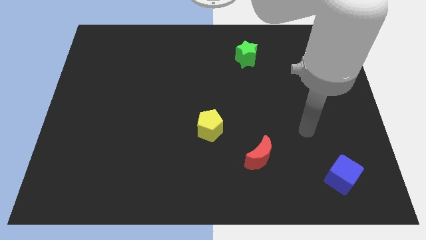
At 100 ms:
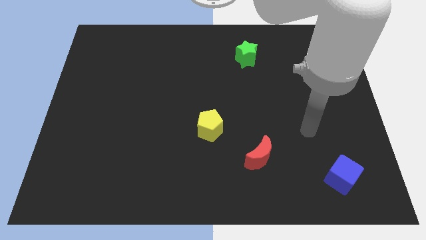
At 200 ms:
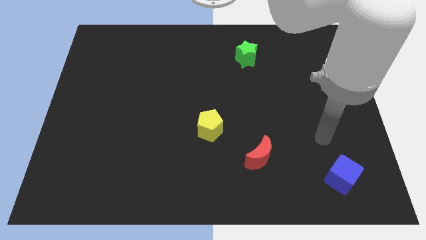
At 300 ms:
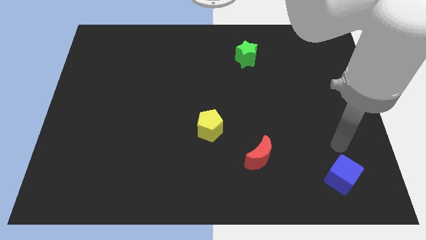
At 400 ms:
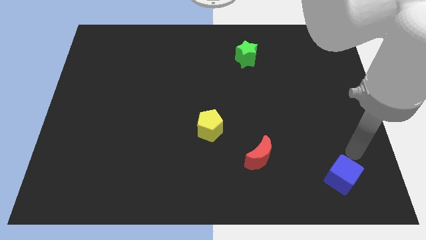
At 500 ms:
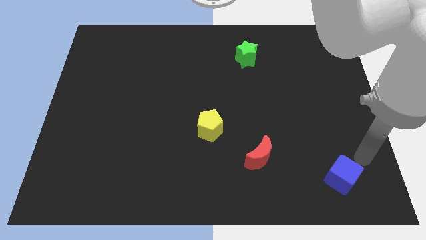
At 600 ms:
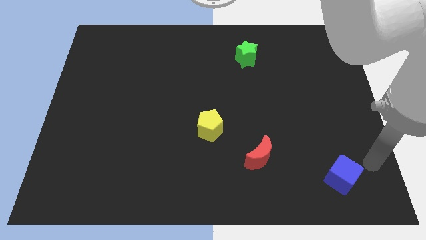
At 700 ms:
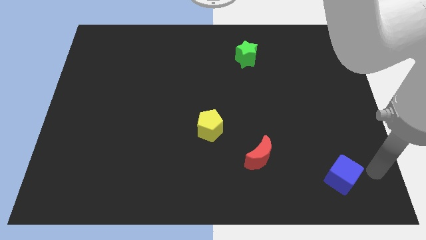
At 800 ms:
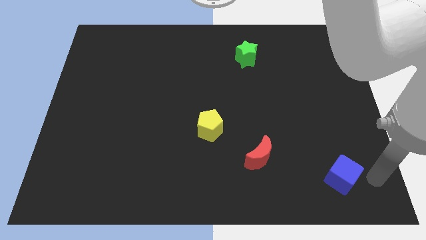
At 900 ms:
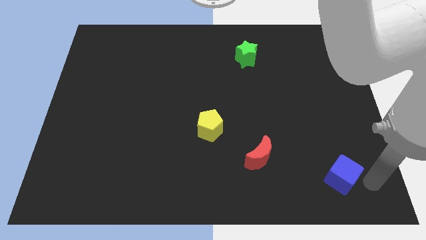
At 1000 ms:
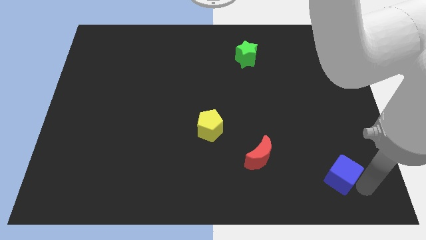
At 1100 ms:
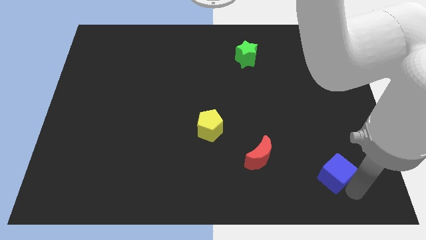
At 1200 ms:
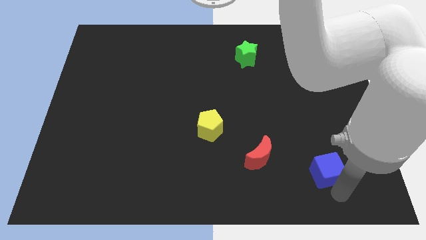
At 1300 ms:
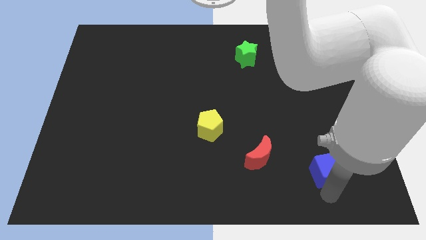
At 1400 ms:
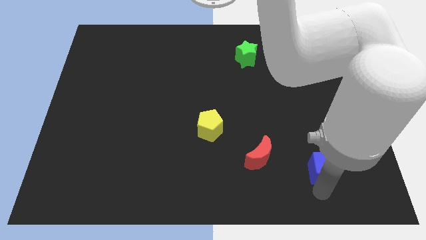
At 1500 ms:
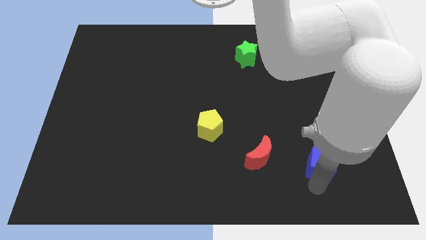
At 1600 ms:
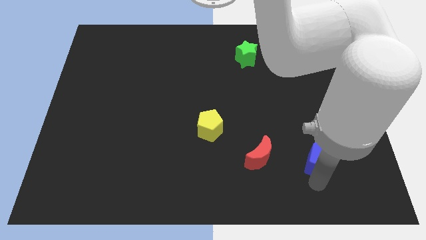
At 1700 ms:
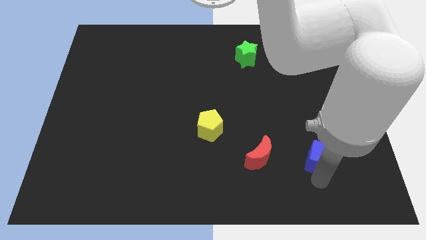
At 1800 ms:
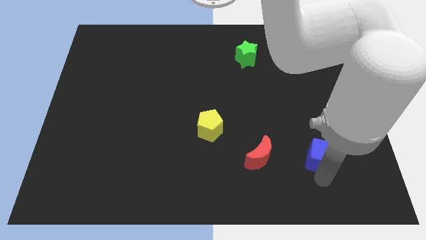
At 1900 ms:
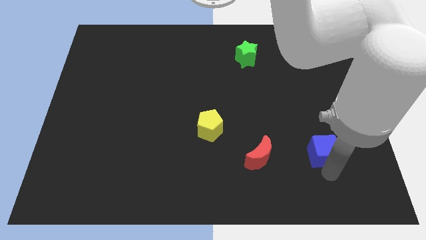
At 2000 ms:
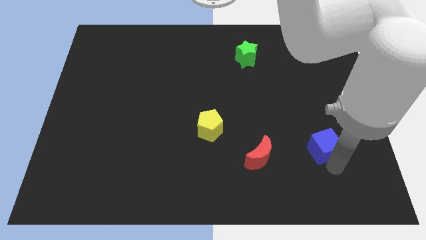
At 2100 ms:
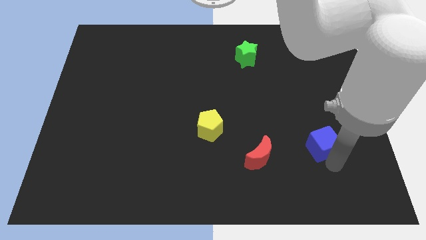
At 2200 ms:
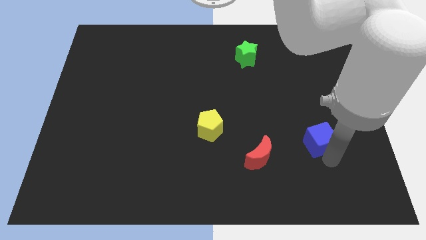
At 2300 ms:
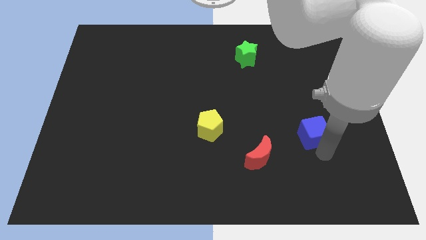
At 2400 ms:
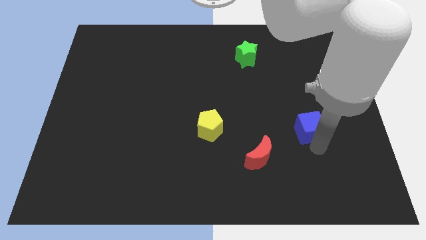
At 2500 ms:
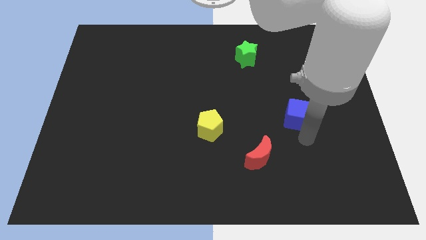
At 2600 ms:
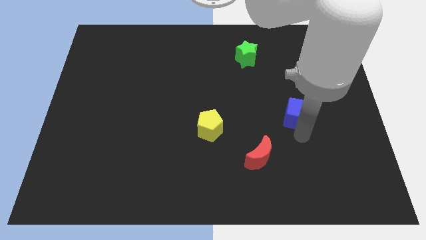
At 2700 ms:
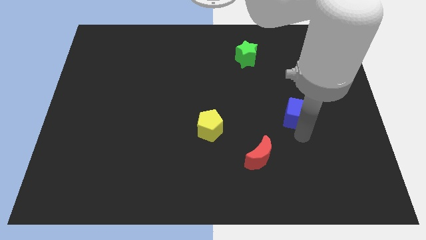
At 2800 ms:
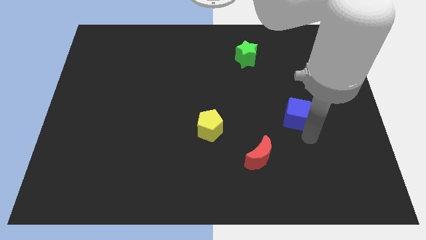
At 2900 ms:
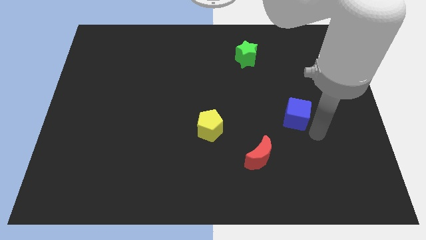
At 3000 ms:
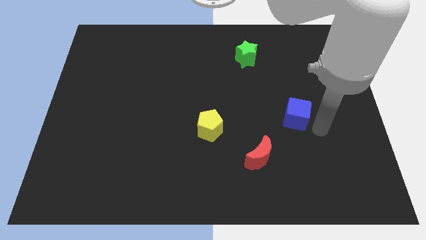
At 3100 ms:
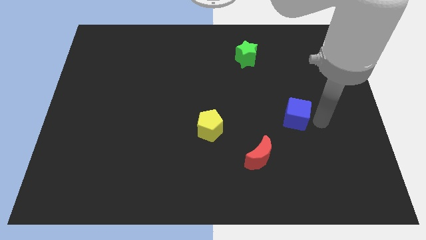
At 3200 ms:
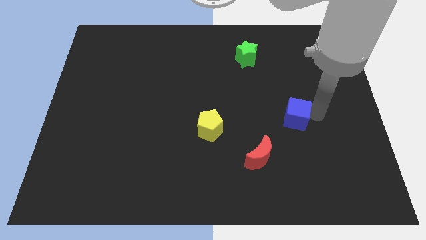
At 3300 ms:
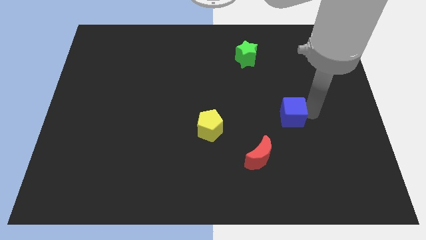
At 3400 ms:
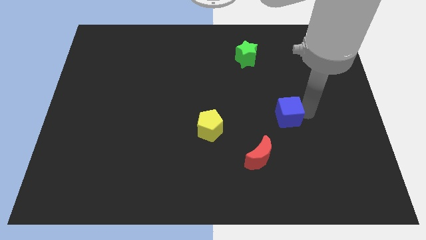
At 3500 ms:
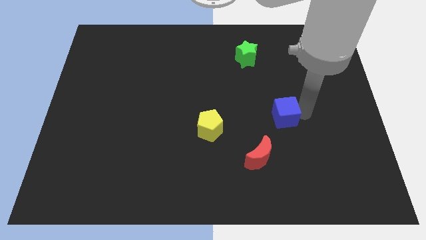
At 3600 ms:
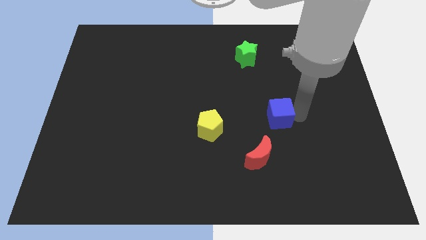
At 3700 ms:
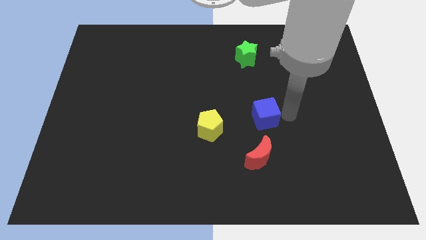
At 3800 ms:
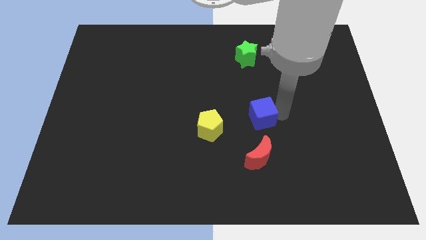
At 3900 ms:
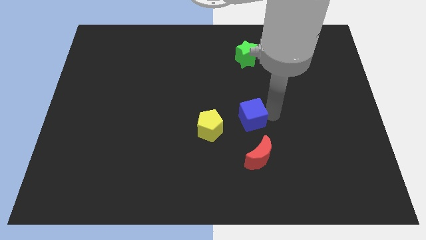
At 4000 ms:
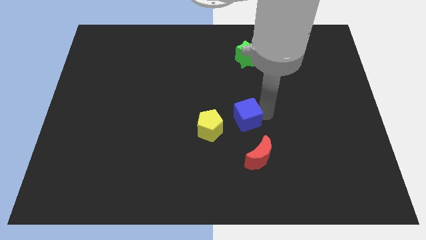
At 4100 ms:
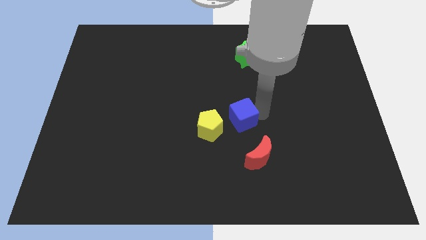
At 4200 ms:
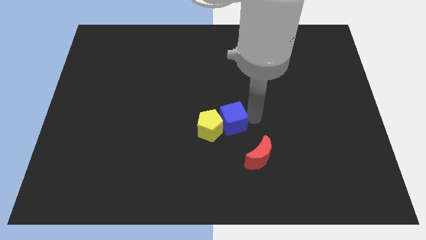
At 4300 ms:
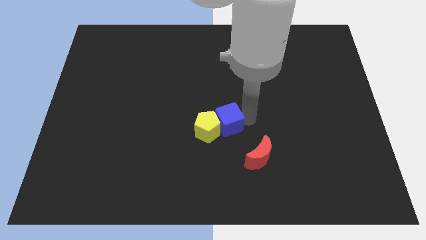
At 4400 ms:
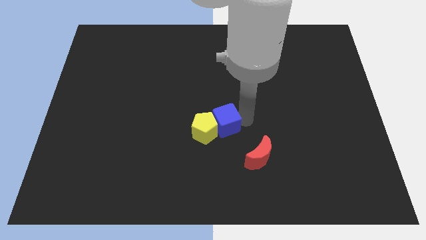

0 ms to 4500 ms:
move the blue block to the pentagon

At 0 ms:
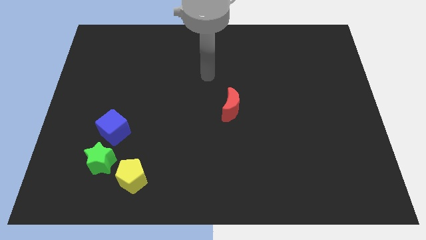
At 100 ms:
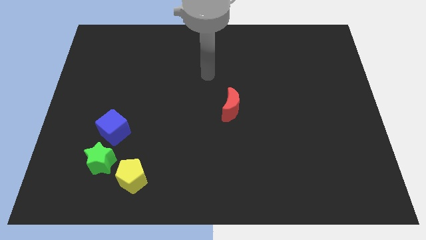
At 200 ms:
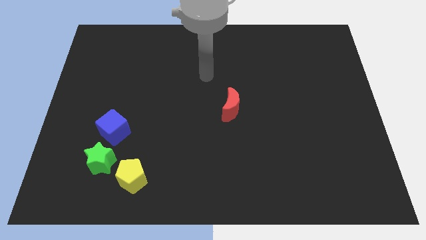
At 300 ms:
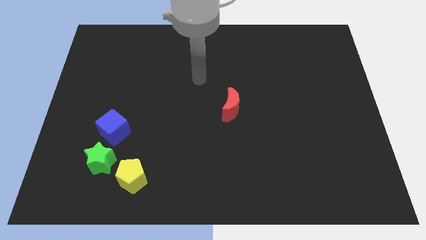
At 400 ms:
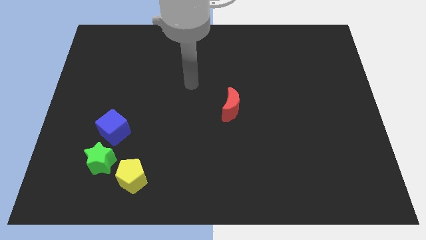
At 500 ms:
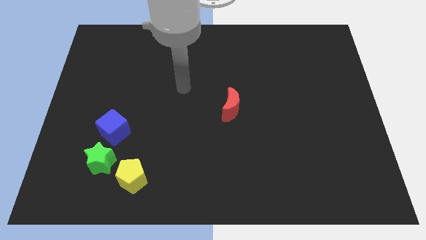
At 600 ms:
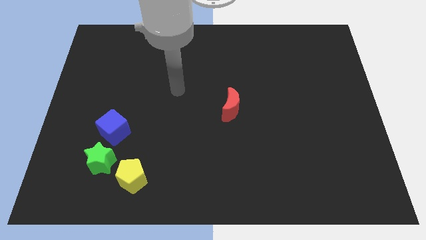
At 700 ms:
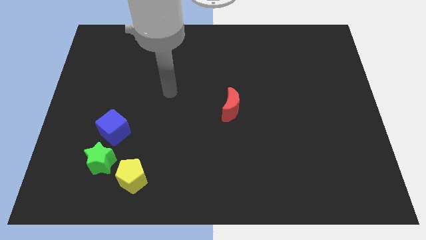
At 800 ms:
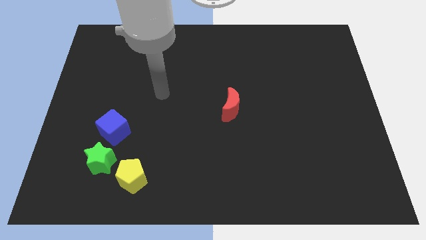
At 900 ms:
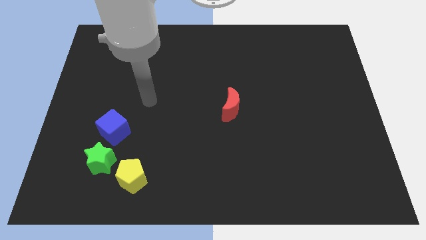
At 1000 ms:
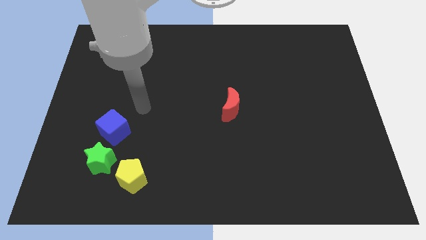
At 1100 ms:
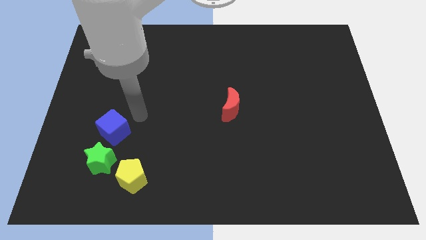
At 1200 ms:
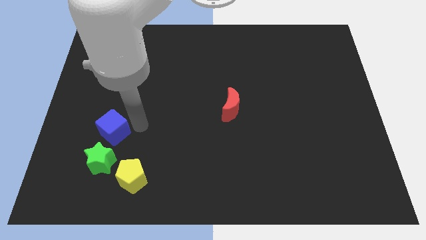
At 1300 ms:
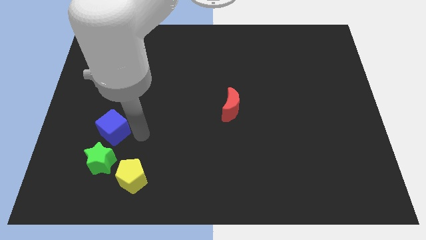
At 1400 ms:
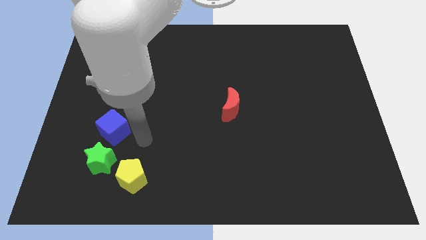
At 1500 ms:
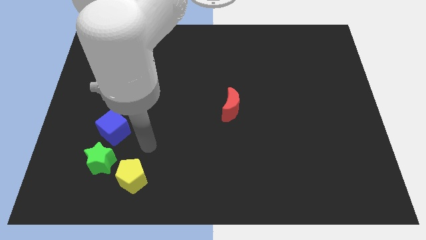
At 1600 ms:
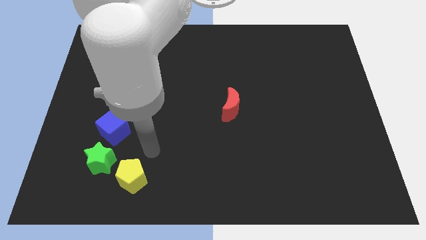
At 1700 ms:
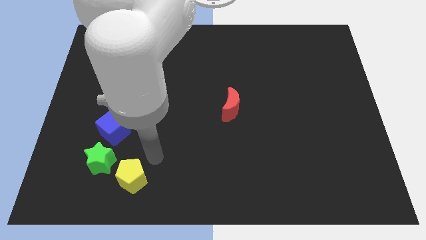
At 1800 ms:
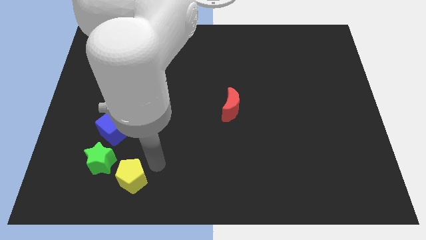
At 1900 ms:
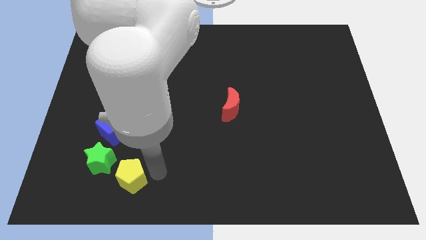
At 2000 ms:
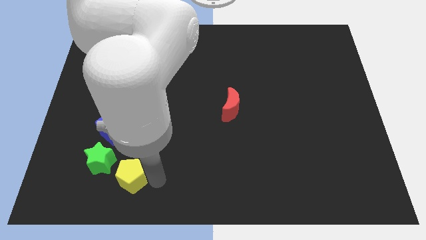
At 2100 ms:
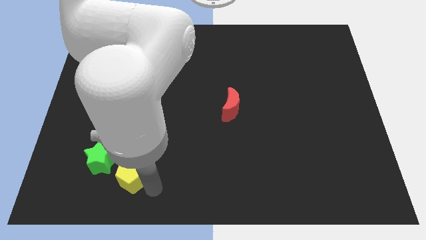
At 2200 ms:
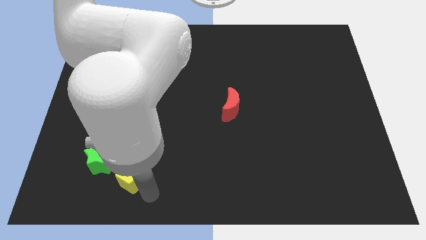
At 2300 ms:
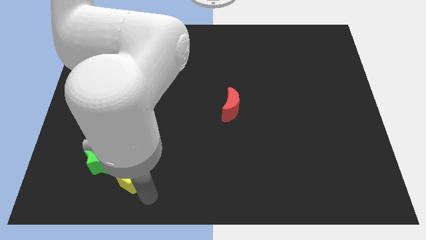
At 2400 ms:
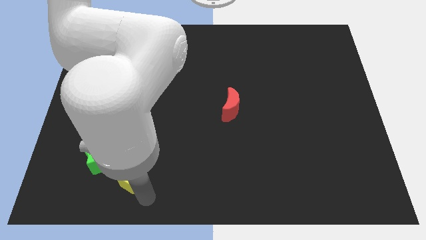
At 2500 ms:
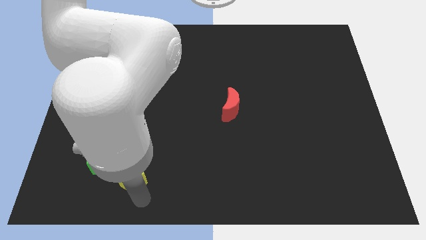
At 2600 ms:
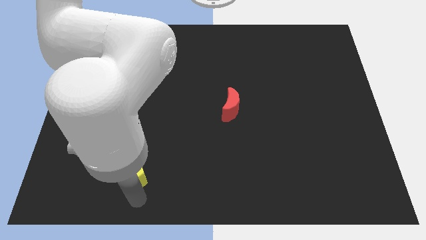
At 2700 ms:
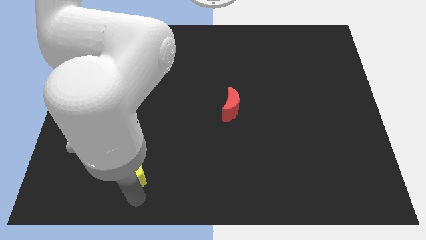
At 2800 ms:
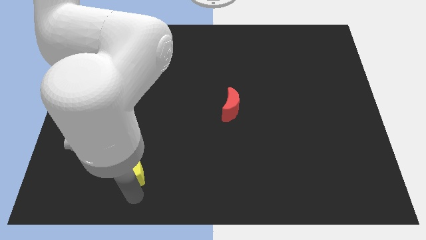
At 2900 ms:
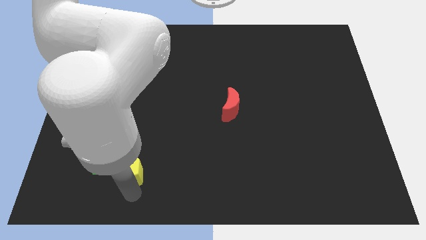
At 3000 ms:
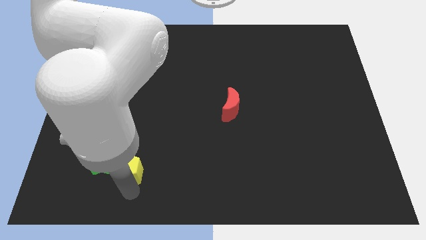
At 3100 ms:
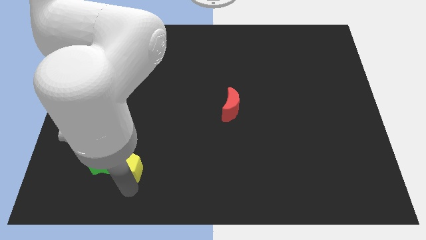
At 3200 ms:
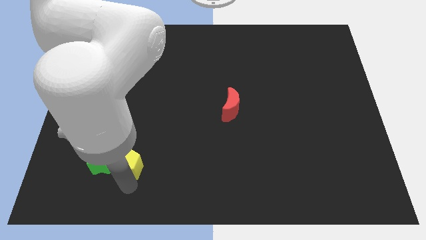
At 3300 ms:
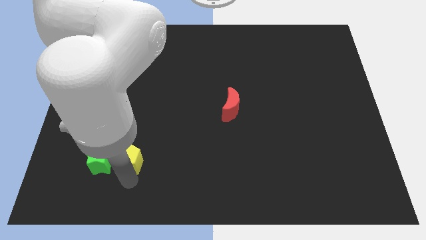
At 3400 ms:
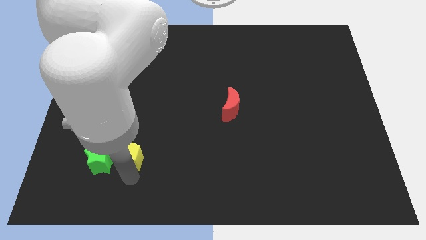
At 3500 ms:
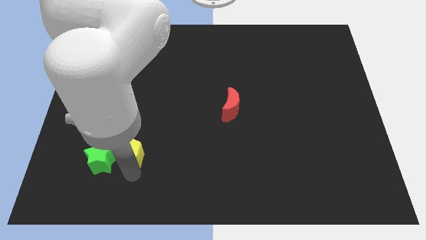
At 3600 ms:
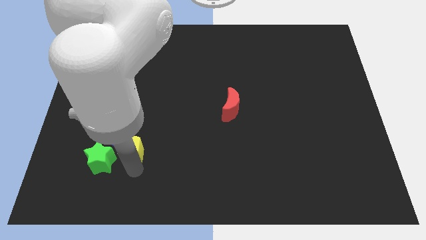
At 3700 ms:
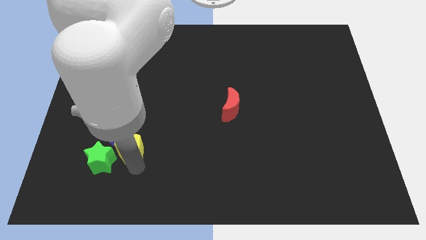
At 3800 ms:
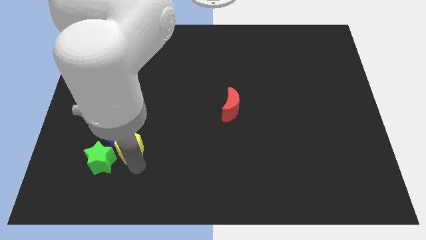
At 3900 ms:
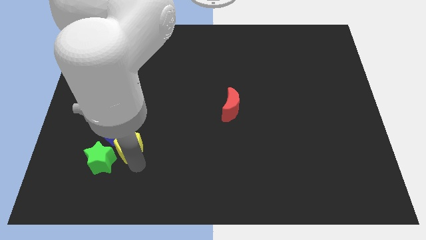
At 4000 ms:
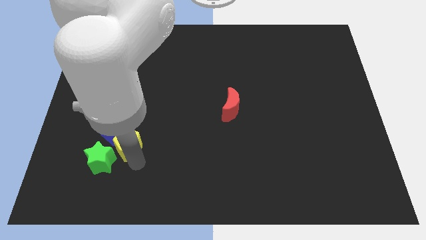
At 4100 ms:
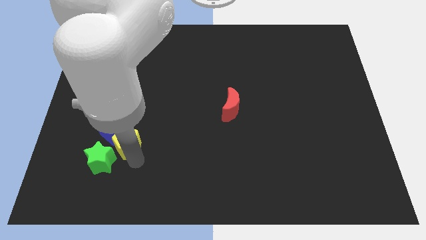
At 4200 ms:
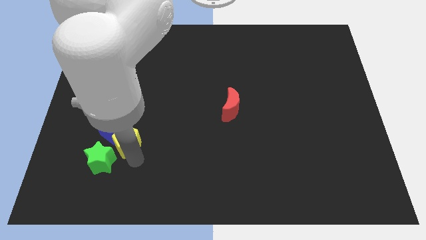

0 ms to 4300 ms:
slide the pentagon next to the cube

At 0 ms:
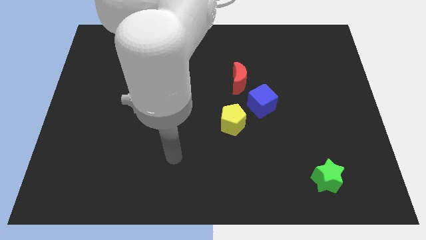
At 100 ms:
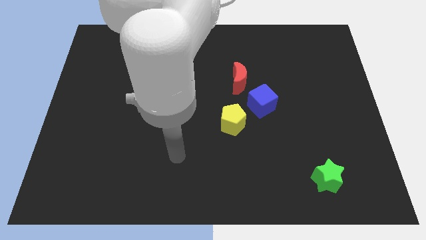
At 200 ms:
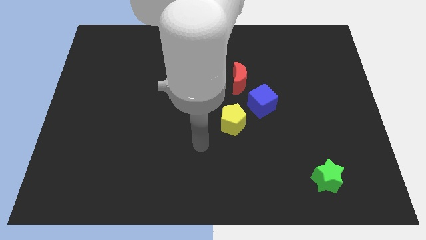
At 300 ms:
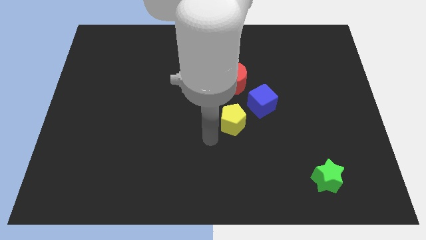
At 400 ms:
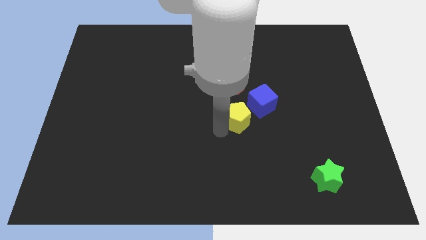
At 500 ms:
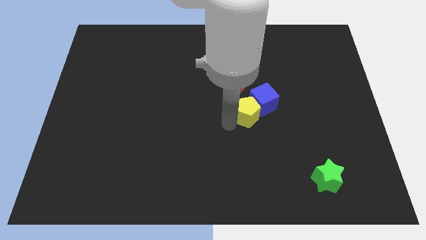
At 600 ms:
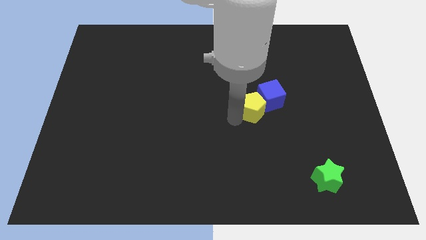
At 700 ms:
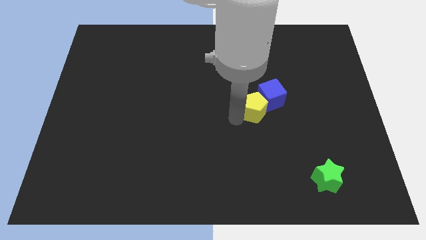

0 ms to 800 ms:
move the pentagon close to the blue cube
